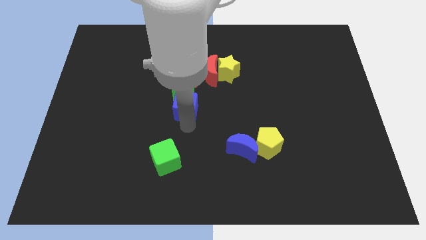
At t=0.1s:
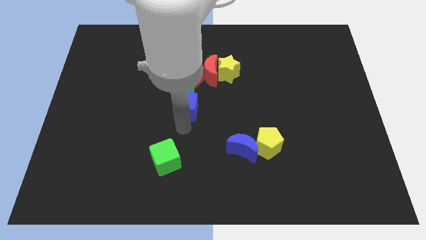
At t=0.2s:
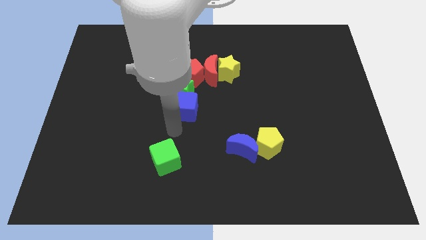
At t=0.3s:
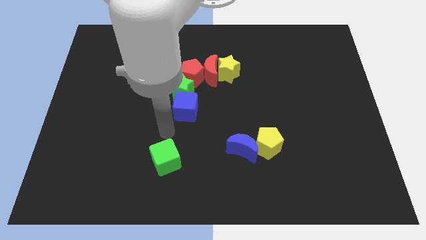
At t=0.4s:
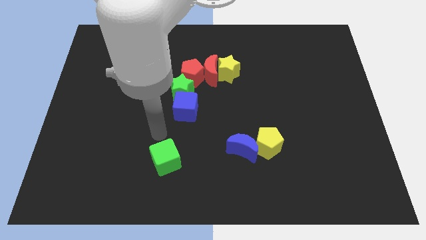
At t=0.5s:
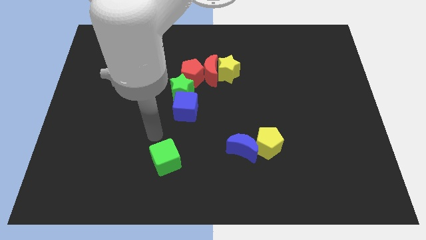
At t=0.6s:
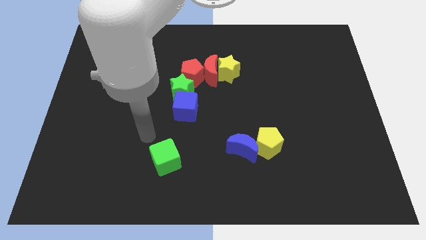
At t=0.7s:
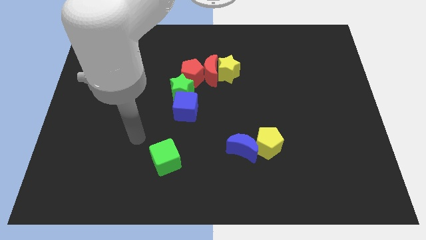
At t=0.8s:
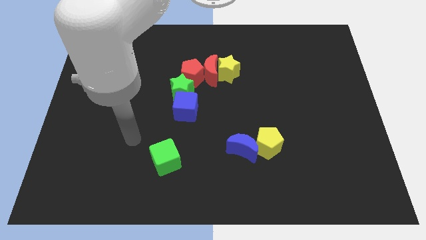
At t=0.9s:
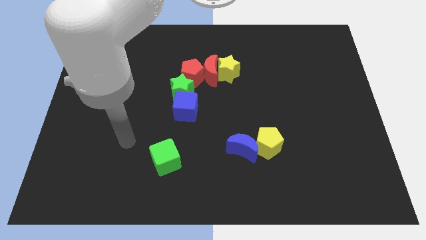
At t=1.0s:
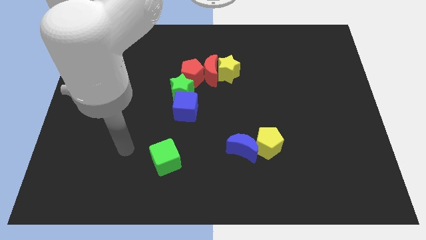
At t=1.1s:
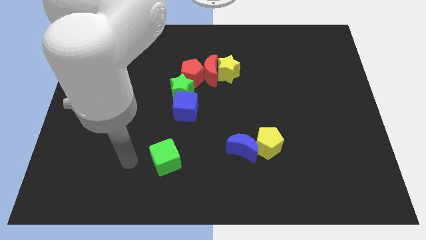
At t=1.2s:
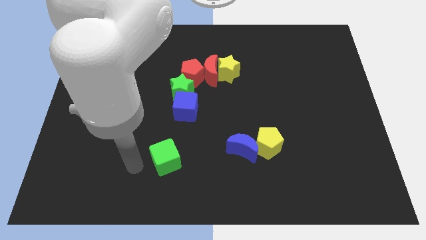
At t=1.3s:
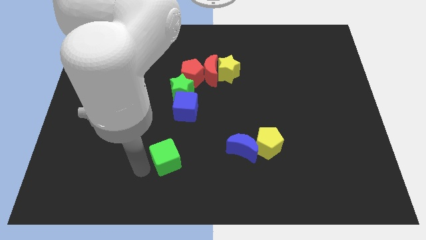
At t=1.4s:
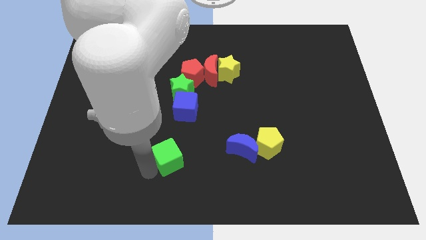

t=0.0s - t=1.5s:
move your arm away from the blue cube

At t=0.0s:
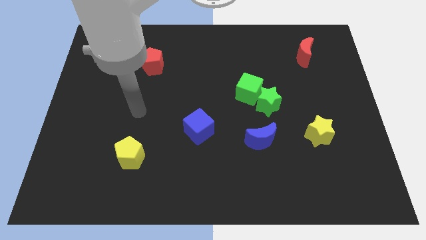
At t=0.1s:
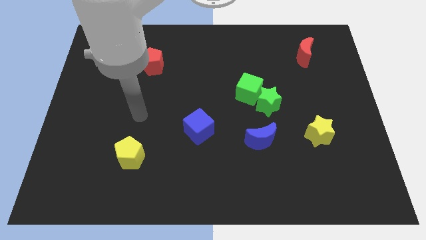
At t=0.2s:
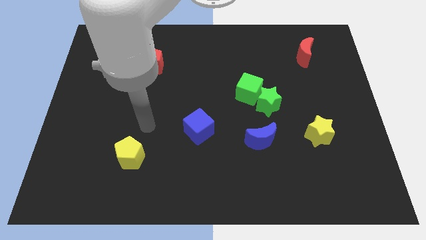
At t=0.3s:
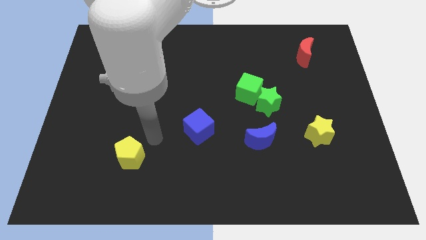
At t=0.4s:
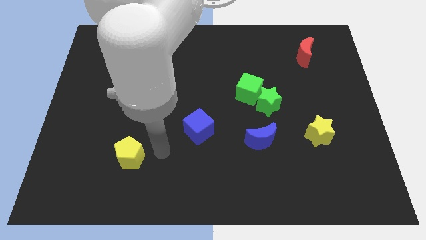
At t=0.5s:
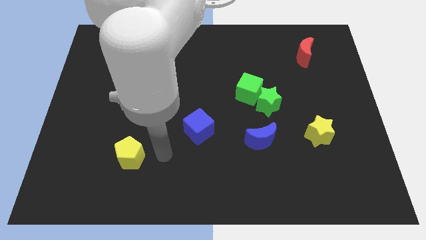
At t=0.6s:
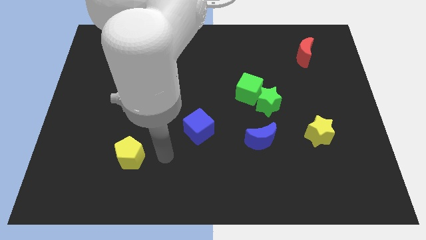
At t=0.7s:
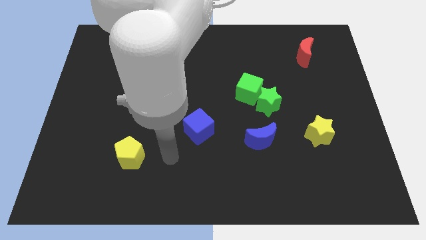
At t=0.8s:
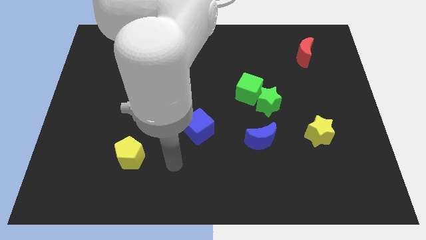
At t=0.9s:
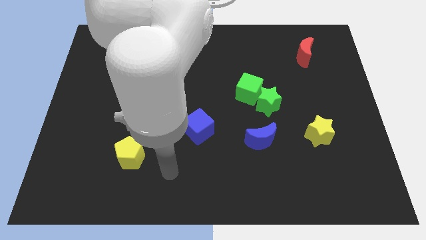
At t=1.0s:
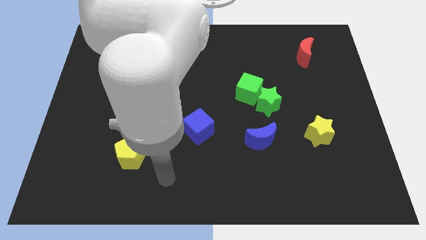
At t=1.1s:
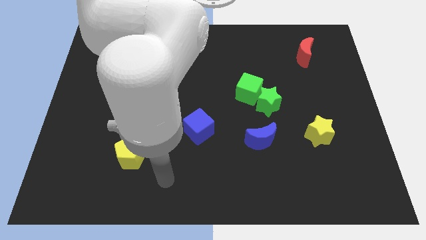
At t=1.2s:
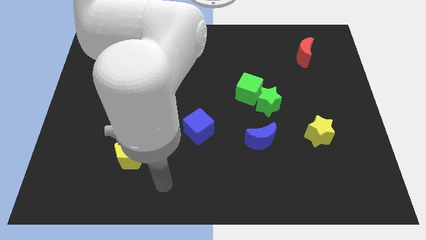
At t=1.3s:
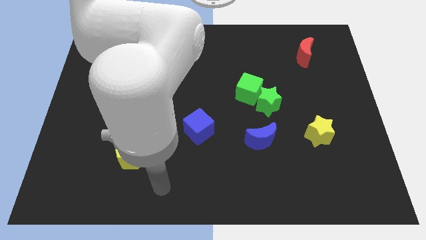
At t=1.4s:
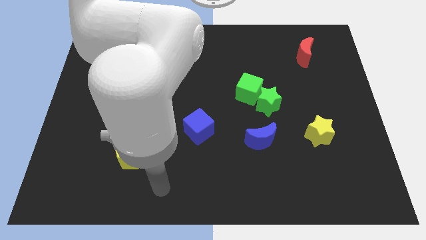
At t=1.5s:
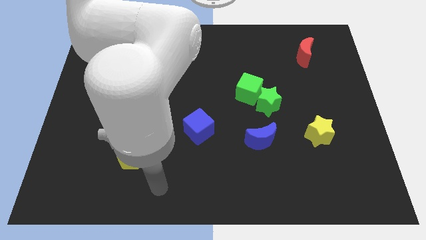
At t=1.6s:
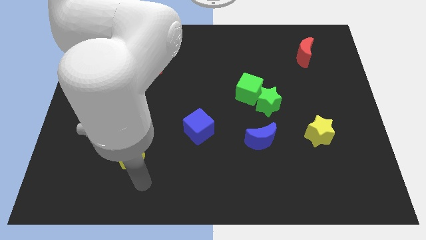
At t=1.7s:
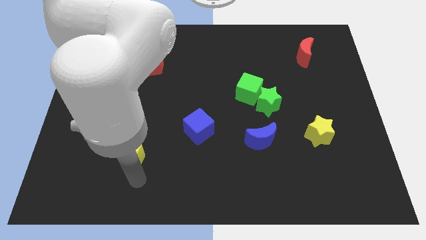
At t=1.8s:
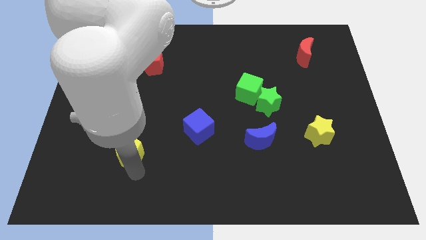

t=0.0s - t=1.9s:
place the arm near the yellow pentagon

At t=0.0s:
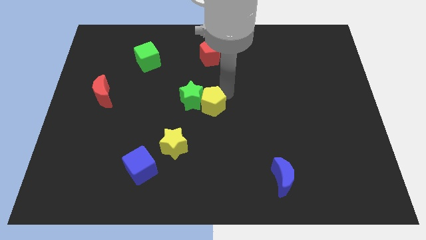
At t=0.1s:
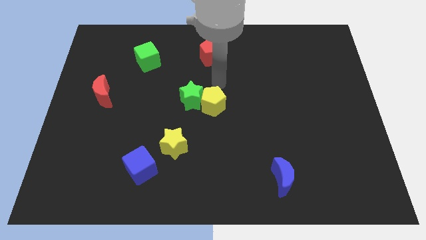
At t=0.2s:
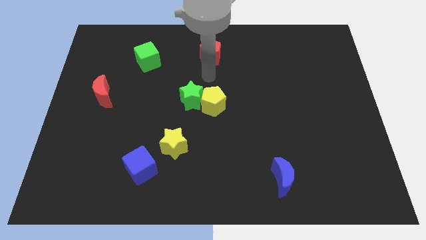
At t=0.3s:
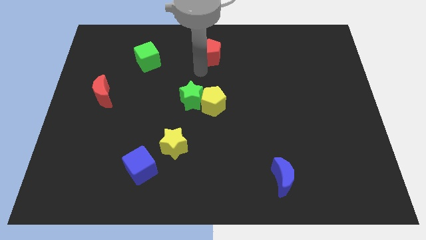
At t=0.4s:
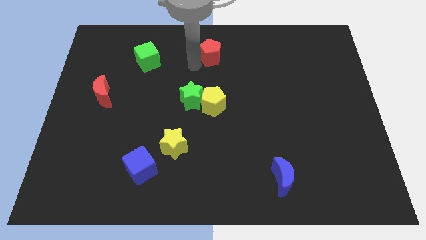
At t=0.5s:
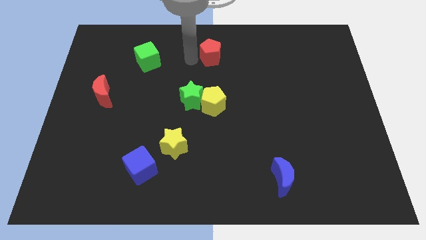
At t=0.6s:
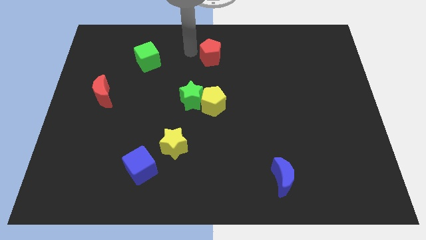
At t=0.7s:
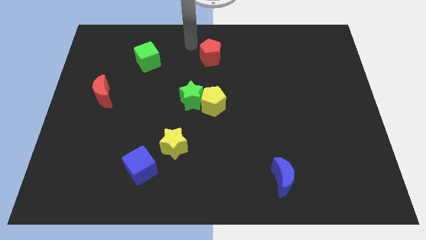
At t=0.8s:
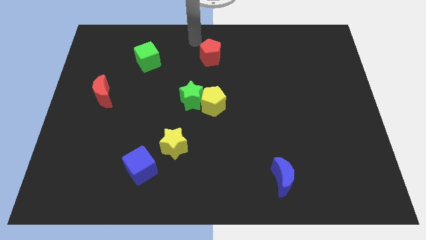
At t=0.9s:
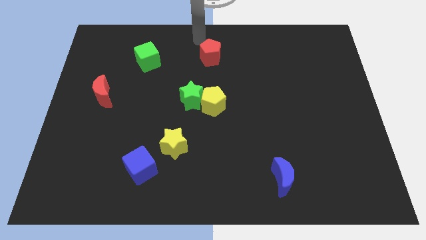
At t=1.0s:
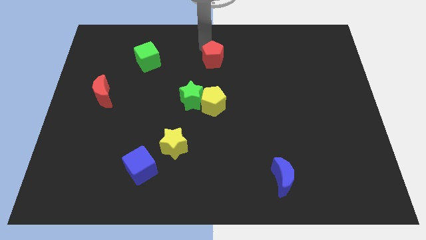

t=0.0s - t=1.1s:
slightly push the red pentagon to the top of the yellow pentagon

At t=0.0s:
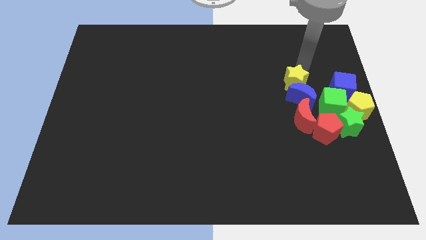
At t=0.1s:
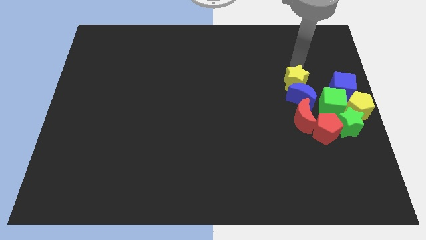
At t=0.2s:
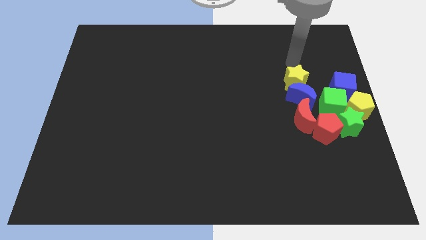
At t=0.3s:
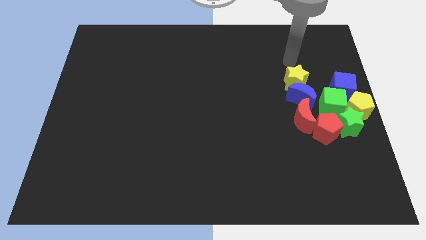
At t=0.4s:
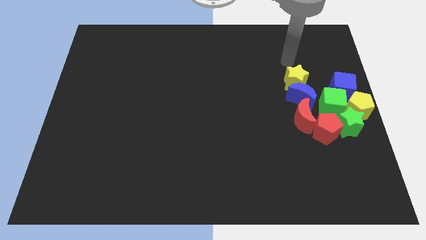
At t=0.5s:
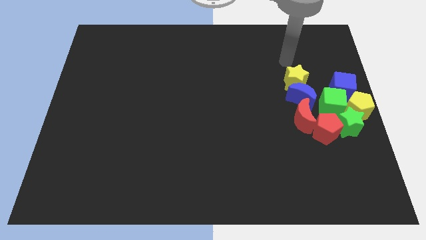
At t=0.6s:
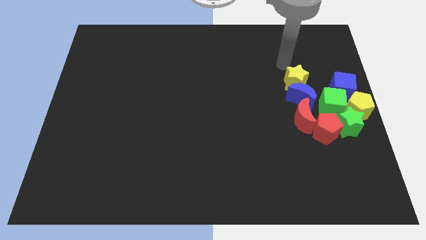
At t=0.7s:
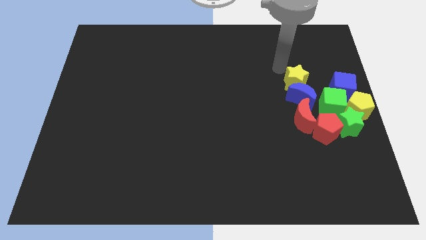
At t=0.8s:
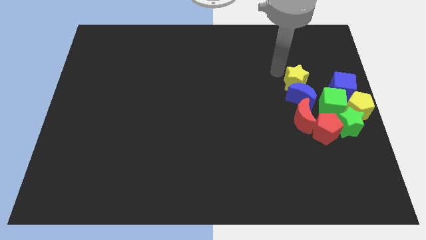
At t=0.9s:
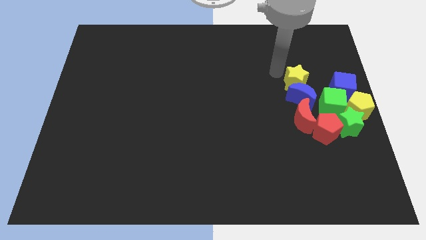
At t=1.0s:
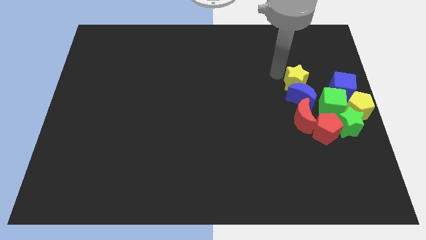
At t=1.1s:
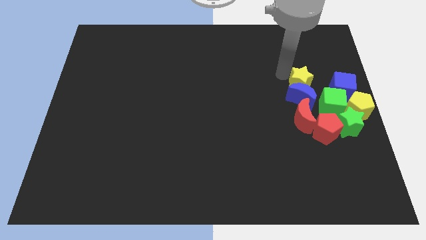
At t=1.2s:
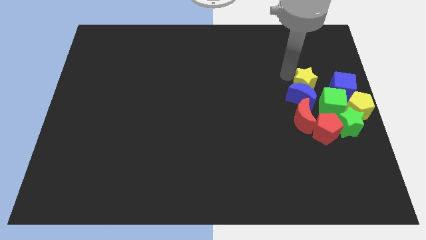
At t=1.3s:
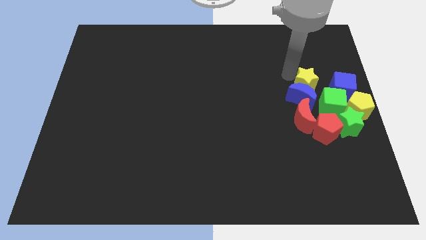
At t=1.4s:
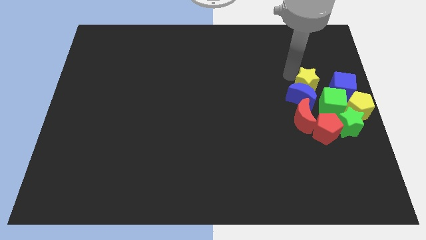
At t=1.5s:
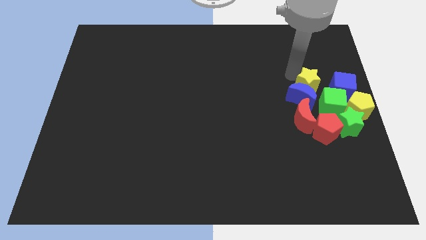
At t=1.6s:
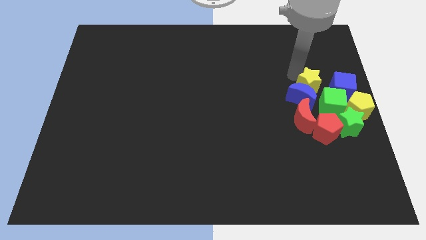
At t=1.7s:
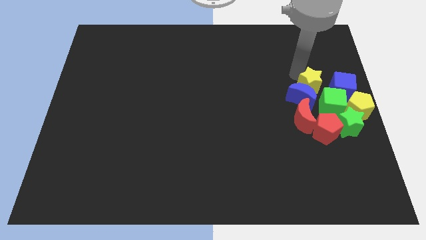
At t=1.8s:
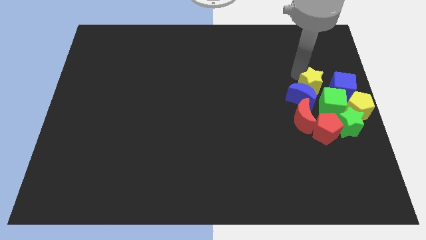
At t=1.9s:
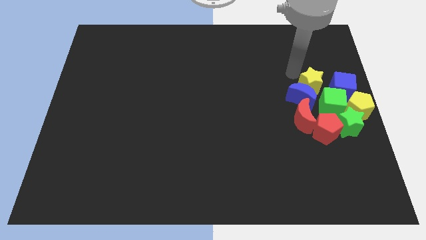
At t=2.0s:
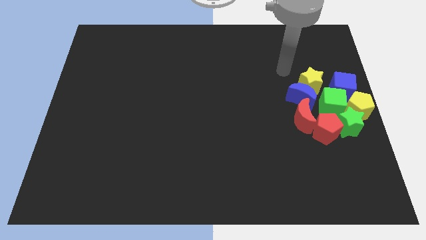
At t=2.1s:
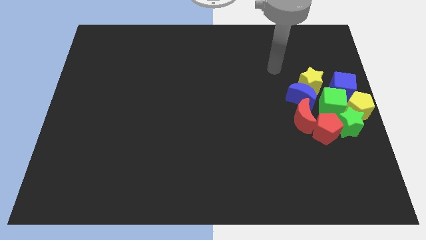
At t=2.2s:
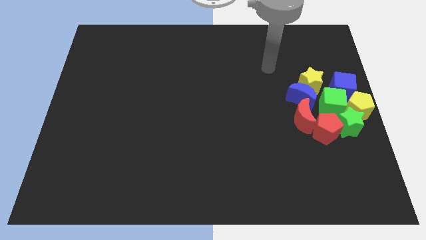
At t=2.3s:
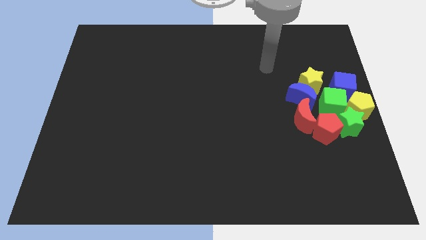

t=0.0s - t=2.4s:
place the yellow star in between the blue cube and blue crescent

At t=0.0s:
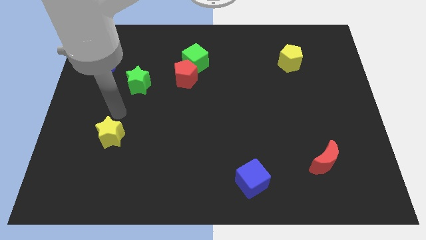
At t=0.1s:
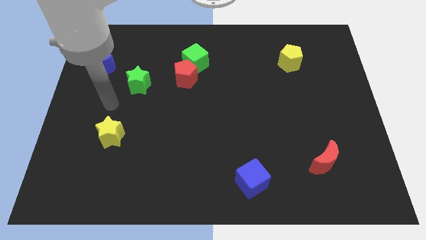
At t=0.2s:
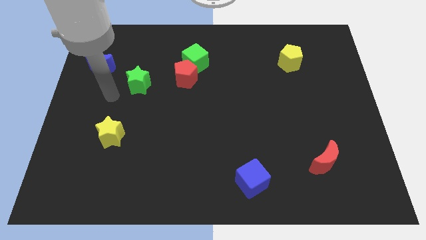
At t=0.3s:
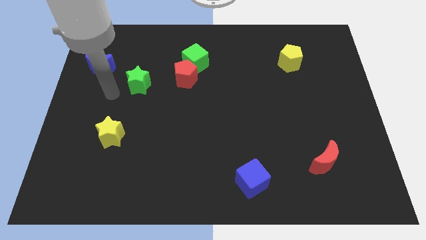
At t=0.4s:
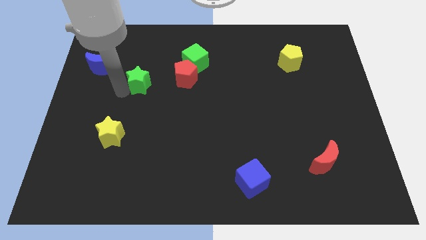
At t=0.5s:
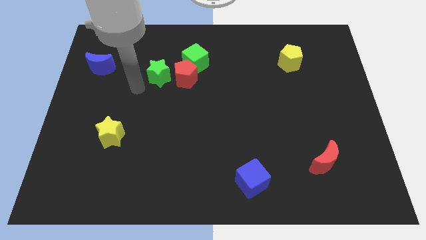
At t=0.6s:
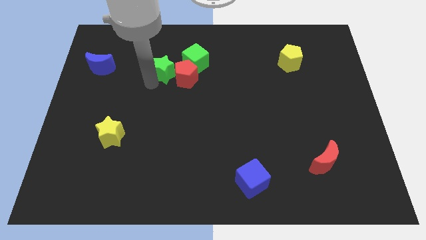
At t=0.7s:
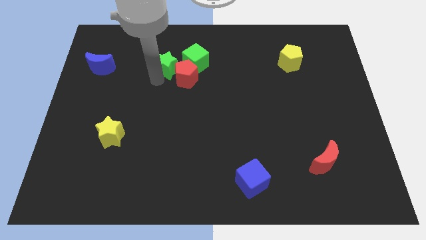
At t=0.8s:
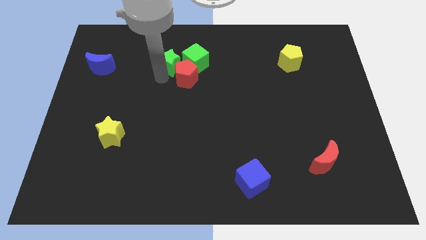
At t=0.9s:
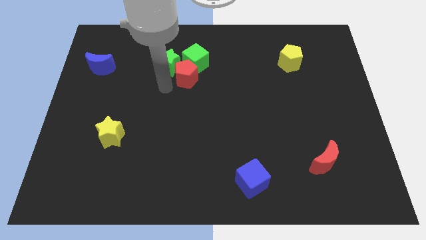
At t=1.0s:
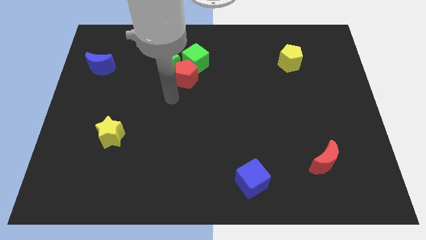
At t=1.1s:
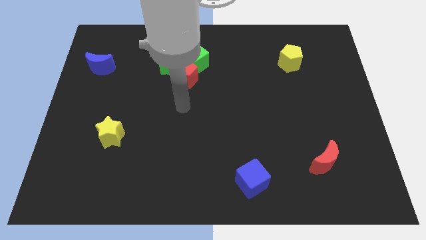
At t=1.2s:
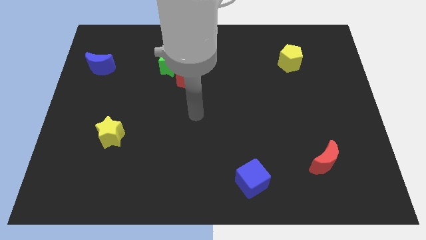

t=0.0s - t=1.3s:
put the green star to the left side of the green cube

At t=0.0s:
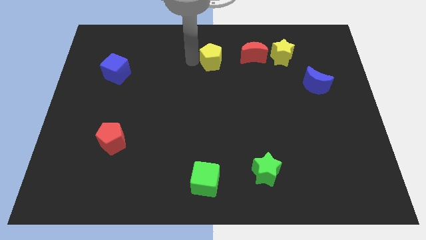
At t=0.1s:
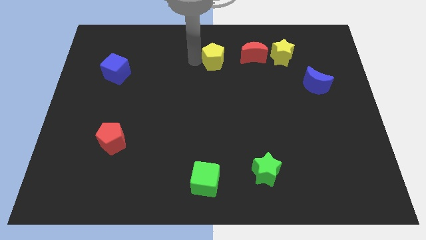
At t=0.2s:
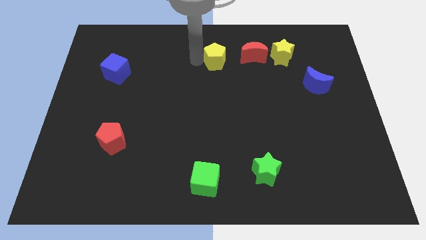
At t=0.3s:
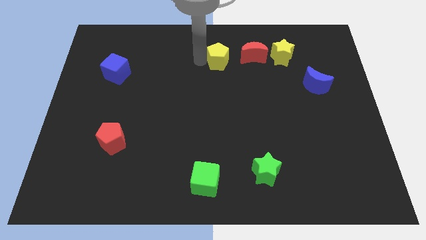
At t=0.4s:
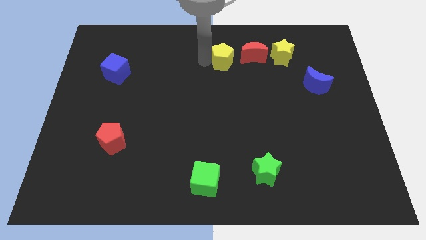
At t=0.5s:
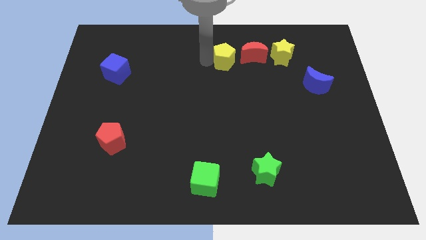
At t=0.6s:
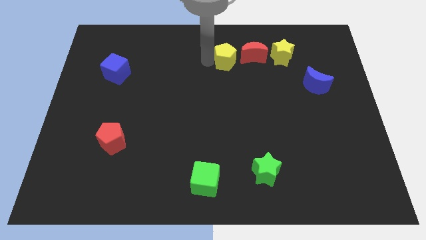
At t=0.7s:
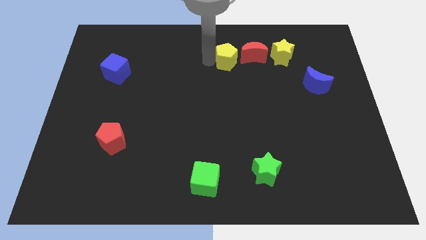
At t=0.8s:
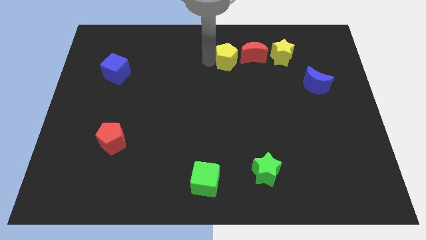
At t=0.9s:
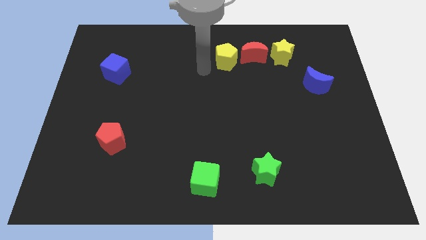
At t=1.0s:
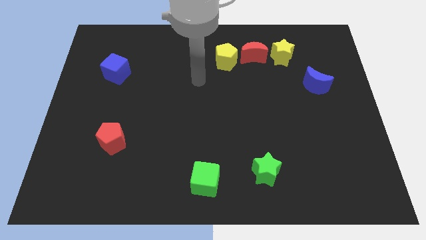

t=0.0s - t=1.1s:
take the yellow pentagon close to the red crescent
